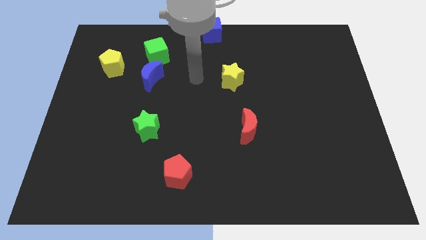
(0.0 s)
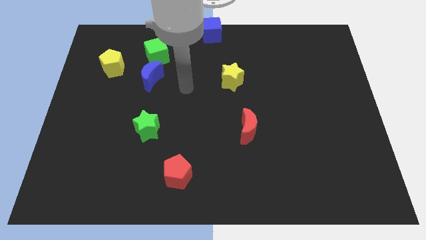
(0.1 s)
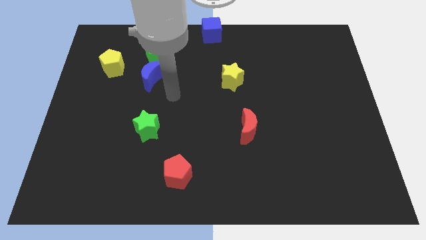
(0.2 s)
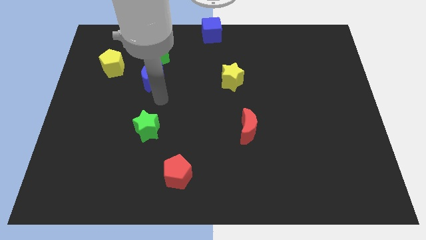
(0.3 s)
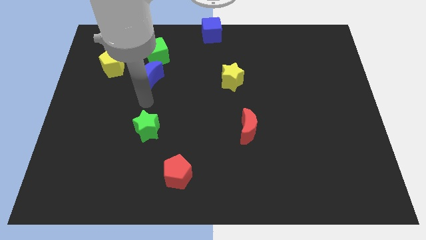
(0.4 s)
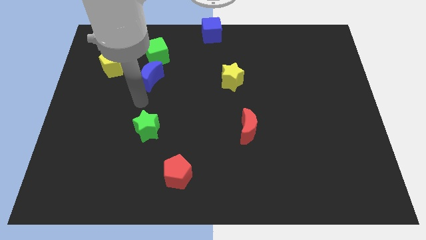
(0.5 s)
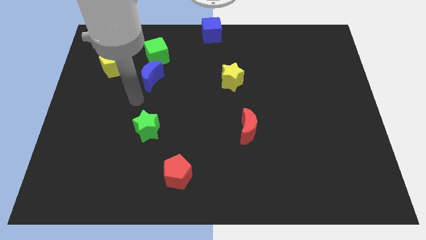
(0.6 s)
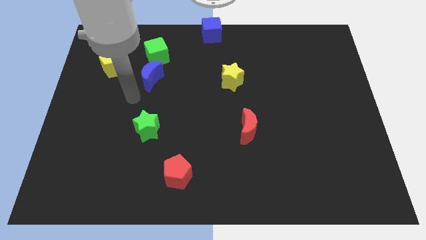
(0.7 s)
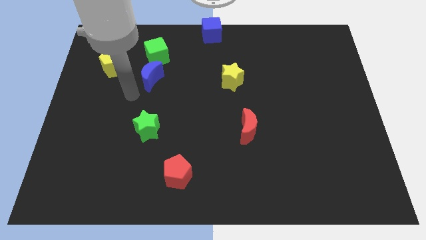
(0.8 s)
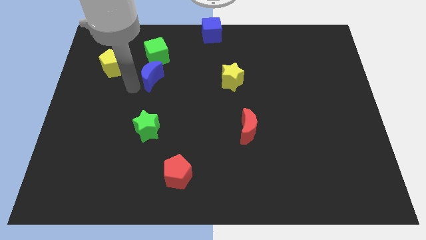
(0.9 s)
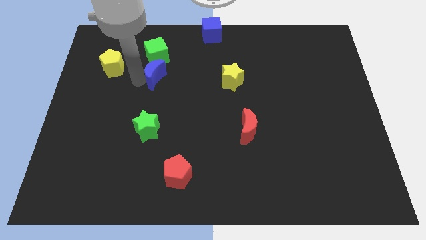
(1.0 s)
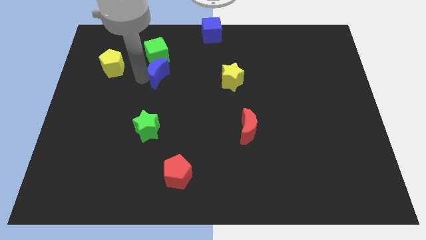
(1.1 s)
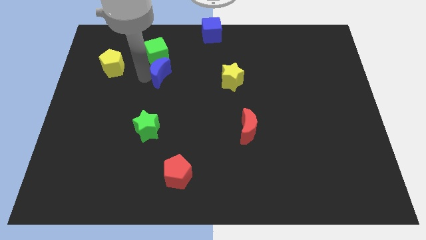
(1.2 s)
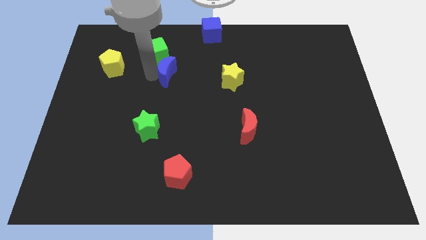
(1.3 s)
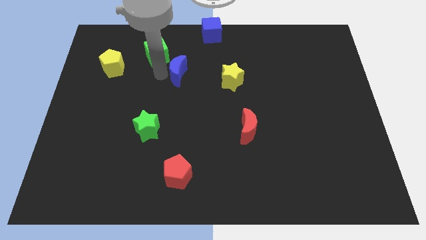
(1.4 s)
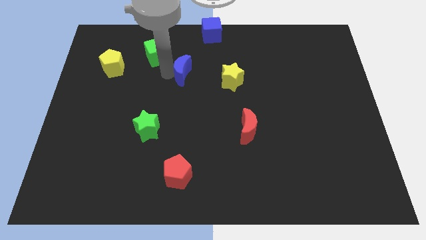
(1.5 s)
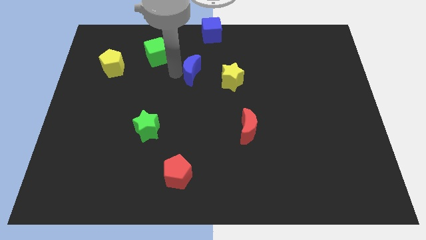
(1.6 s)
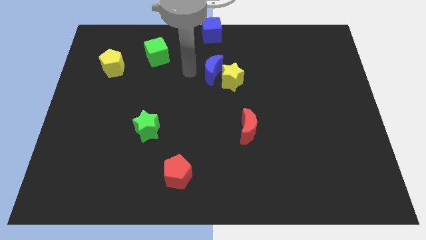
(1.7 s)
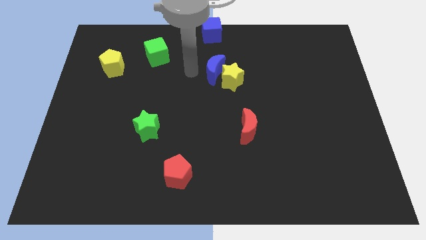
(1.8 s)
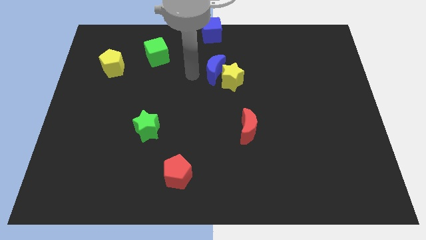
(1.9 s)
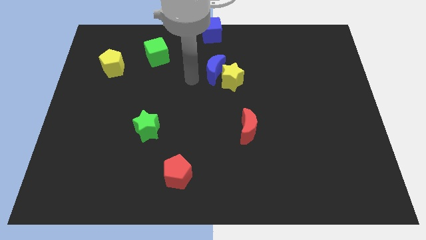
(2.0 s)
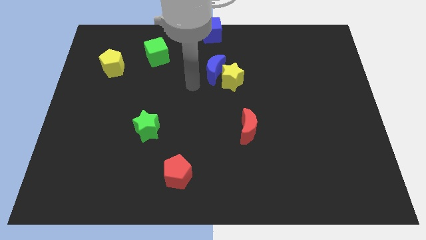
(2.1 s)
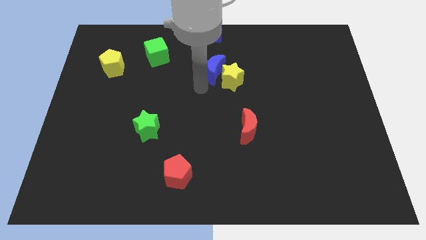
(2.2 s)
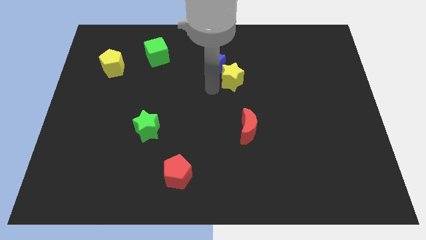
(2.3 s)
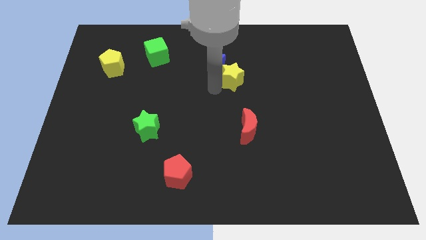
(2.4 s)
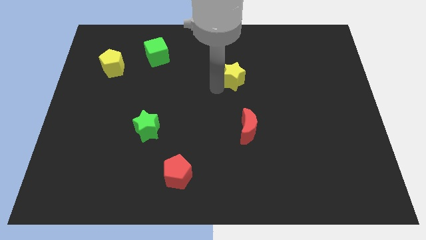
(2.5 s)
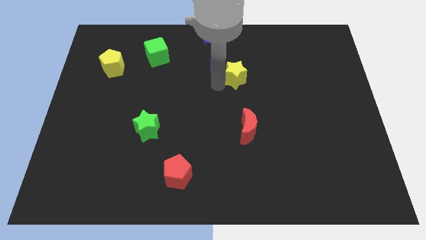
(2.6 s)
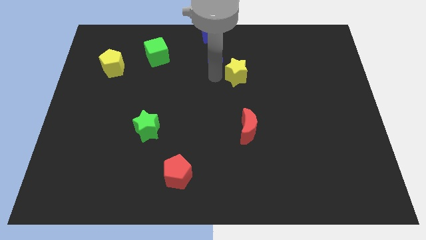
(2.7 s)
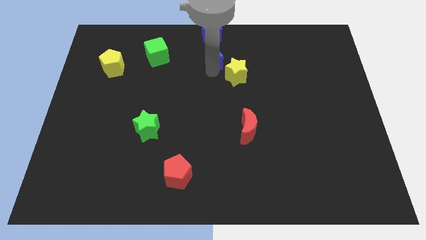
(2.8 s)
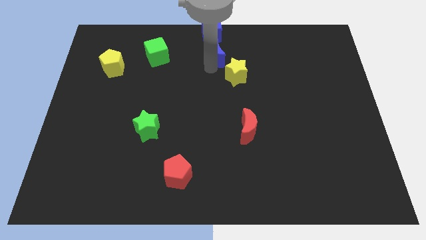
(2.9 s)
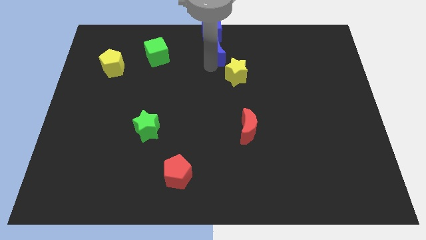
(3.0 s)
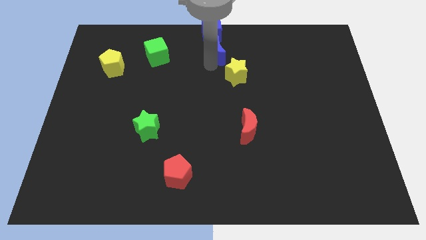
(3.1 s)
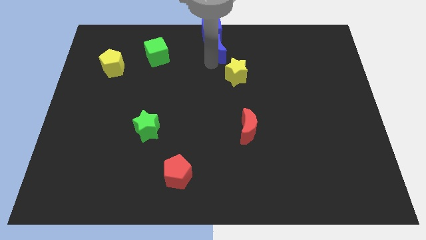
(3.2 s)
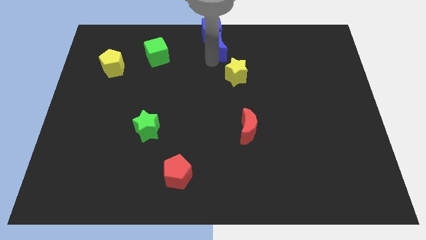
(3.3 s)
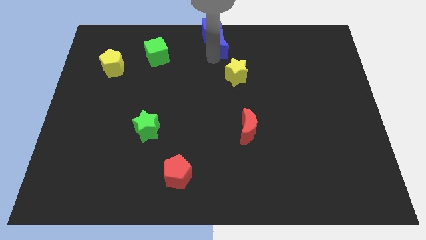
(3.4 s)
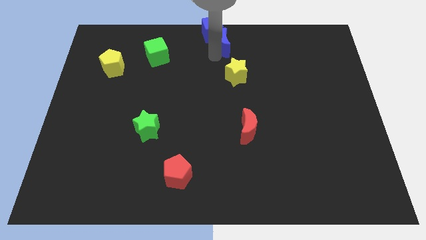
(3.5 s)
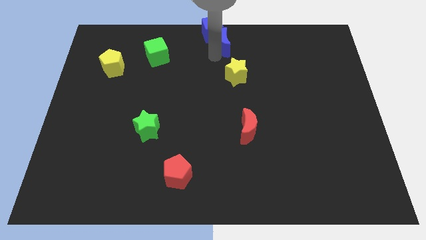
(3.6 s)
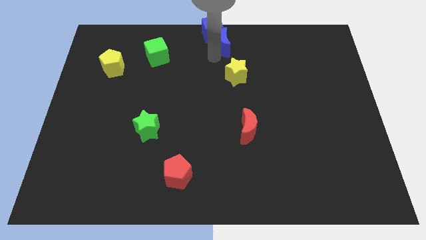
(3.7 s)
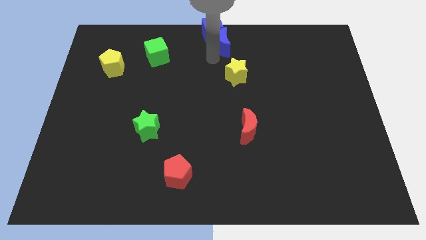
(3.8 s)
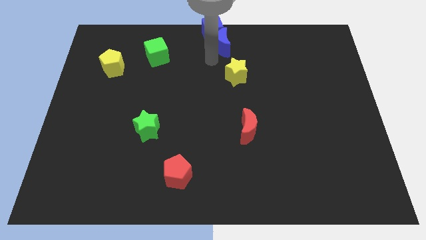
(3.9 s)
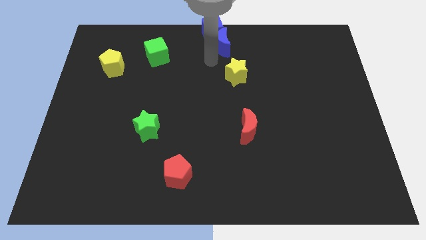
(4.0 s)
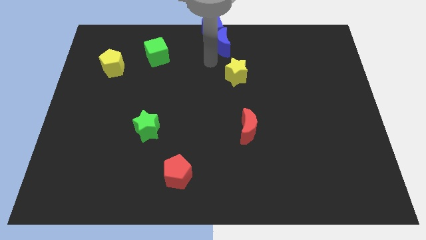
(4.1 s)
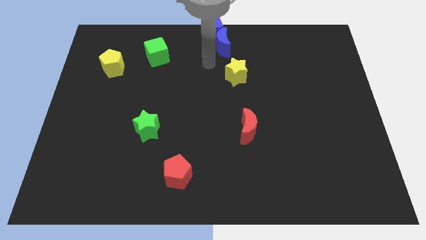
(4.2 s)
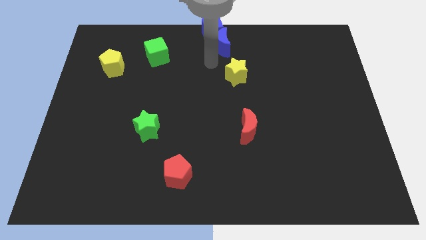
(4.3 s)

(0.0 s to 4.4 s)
place the blue moon below the blue cube by pushing all the blocks coming in its way

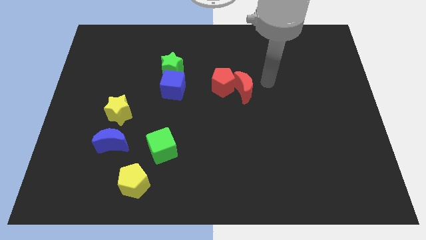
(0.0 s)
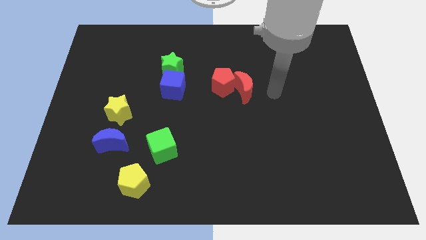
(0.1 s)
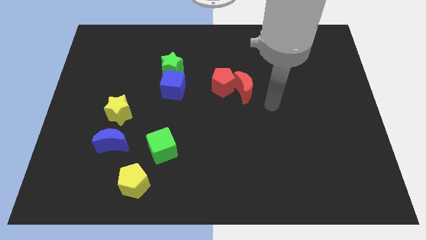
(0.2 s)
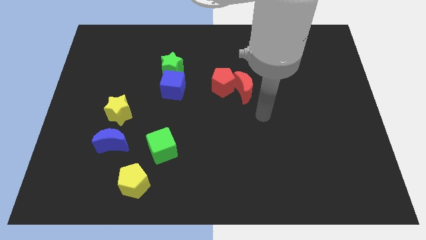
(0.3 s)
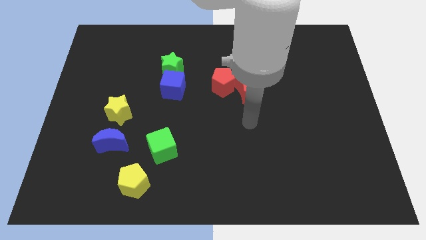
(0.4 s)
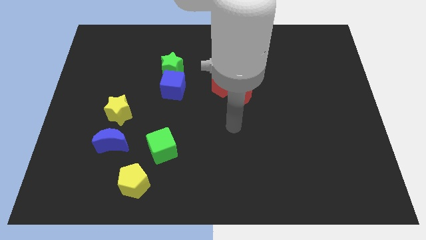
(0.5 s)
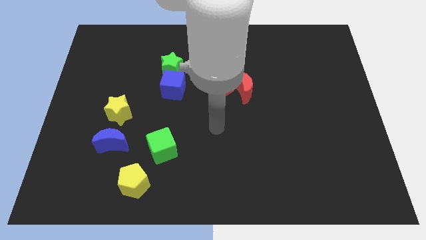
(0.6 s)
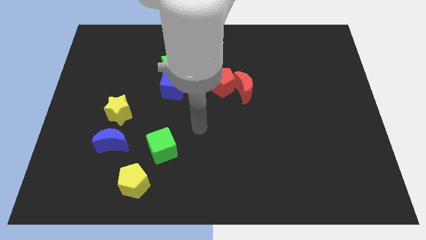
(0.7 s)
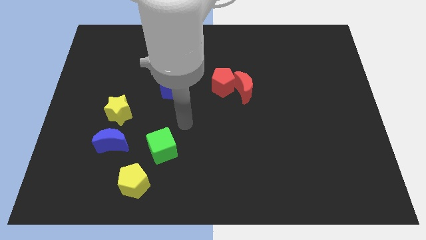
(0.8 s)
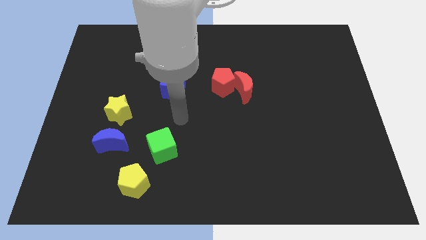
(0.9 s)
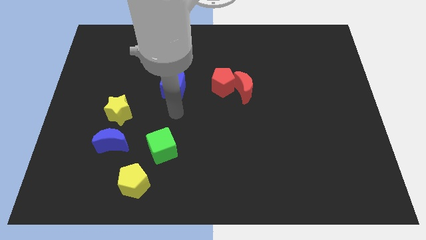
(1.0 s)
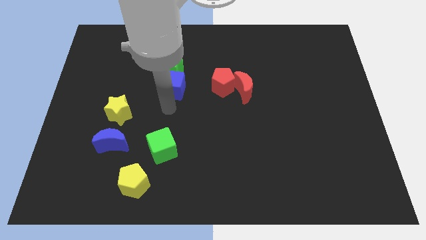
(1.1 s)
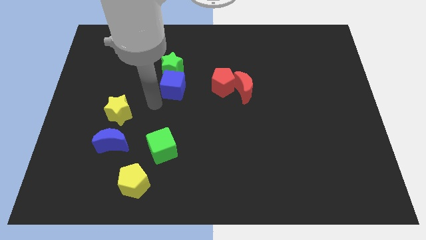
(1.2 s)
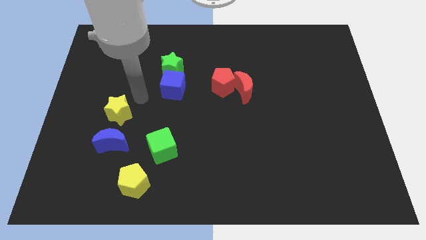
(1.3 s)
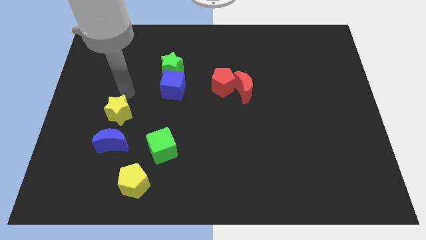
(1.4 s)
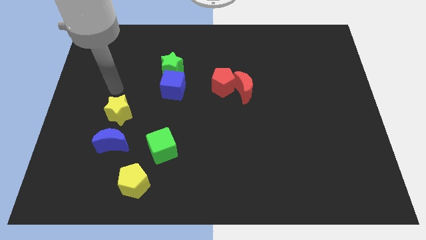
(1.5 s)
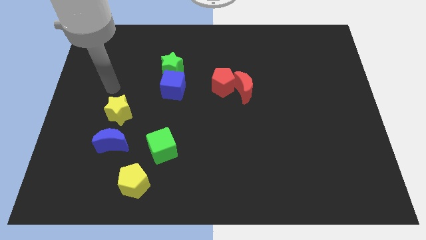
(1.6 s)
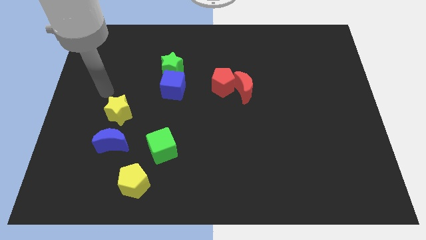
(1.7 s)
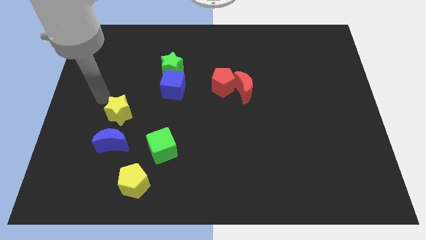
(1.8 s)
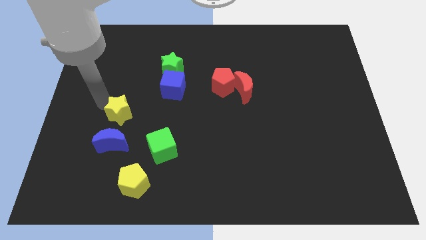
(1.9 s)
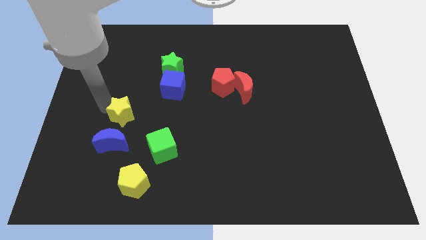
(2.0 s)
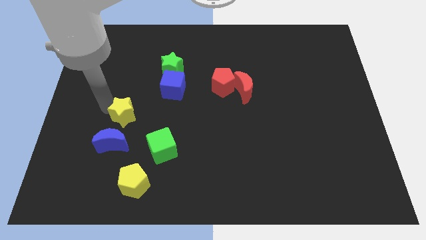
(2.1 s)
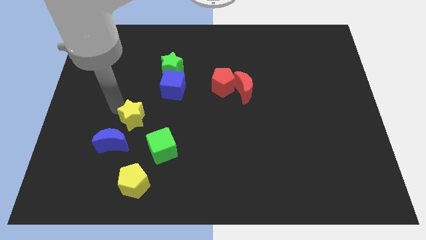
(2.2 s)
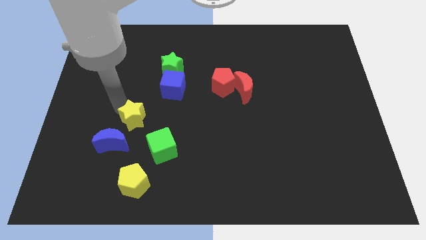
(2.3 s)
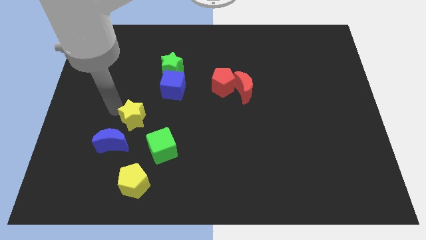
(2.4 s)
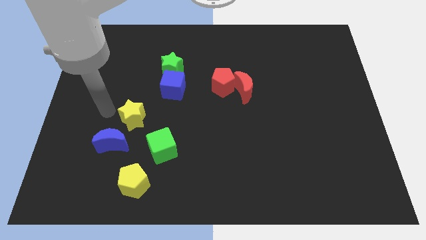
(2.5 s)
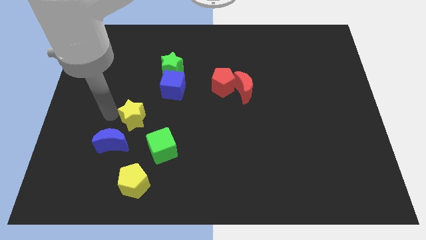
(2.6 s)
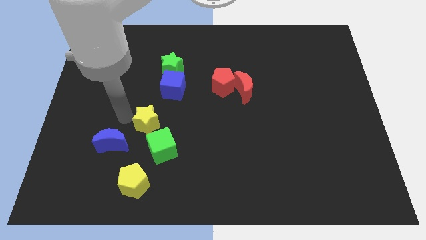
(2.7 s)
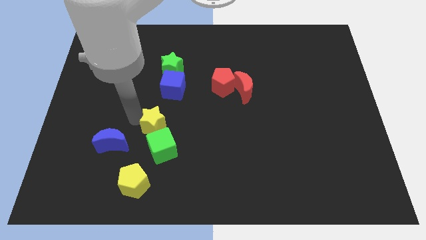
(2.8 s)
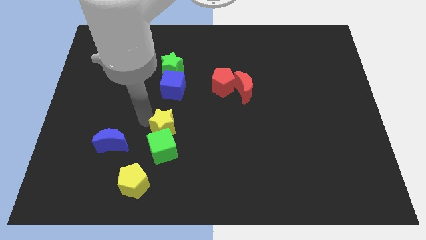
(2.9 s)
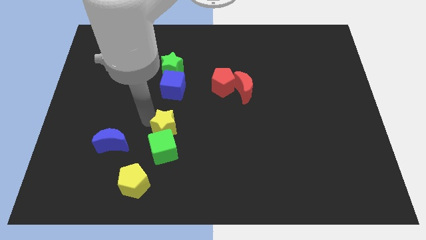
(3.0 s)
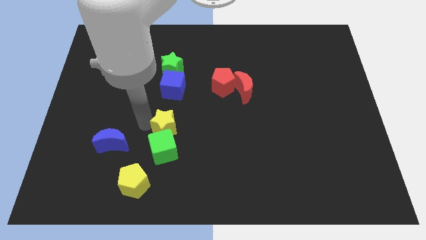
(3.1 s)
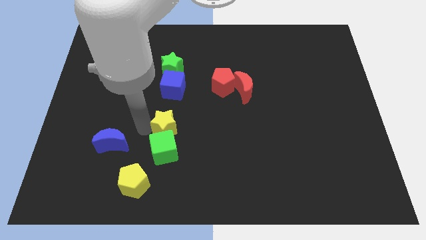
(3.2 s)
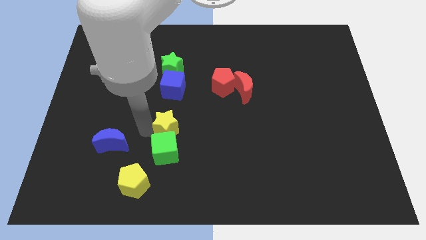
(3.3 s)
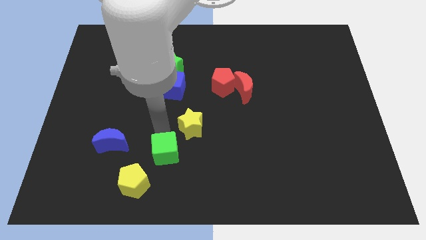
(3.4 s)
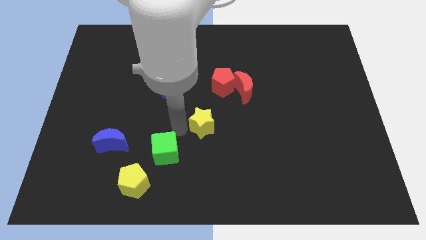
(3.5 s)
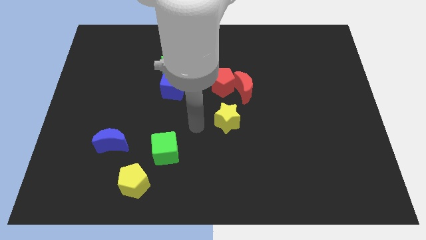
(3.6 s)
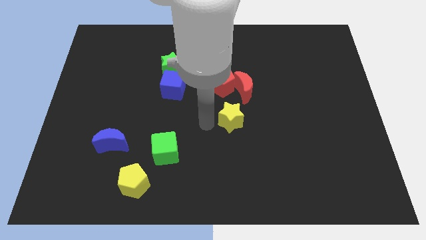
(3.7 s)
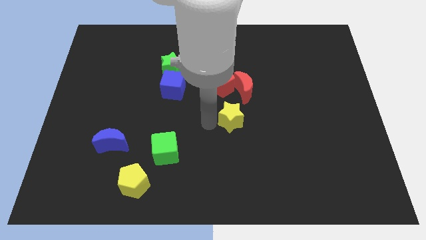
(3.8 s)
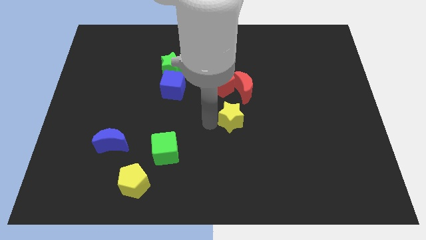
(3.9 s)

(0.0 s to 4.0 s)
push the yellow star to the center of the board

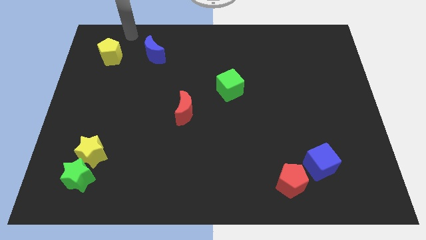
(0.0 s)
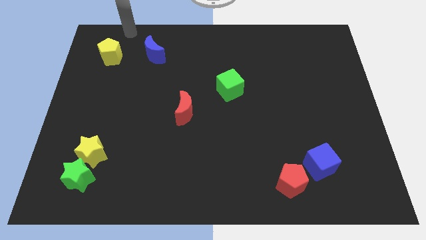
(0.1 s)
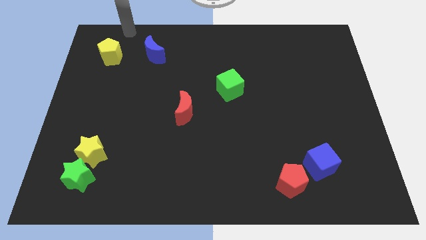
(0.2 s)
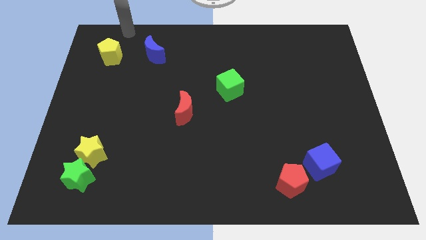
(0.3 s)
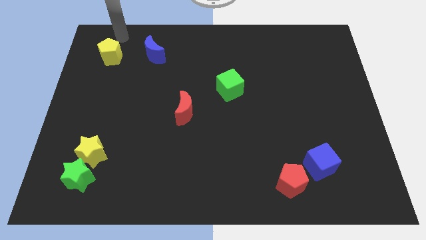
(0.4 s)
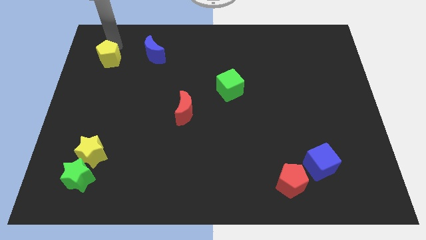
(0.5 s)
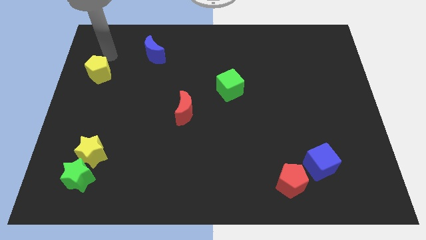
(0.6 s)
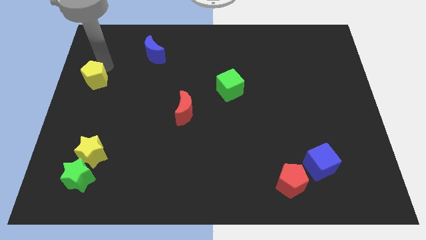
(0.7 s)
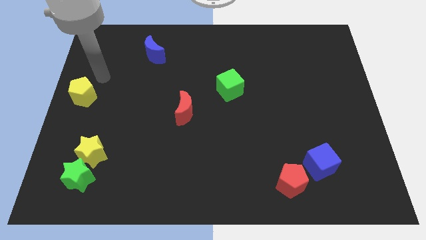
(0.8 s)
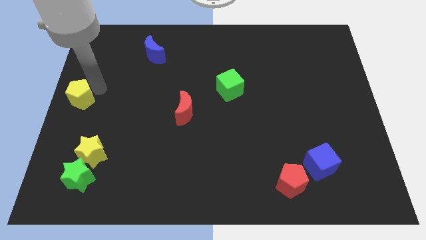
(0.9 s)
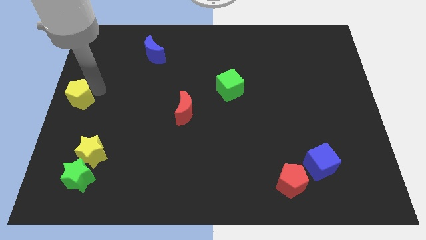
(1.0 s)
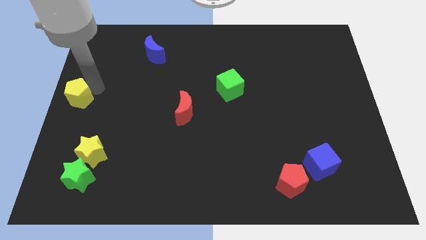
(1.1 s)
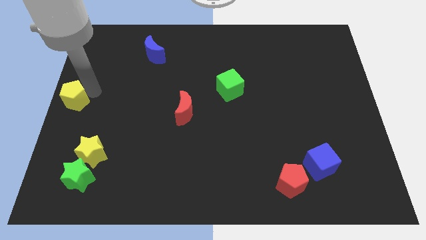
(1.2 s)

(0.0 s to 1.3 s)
move the yellow pentagon to the left center of the board
